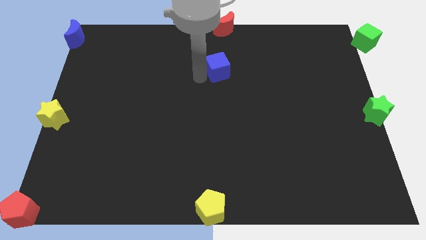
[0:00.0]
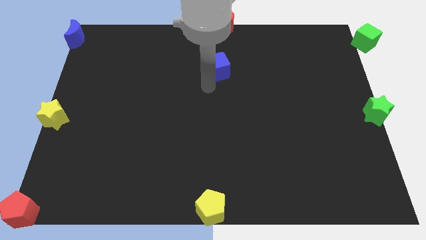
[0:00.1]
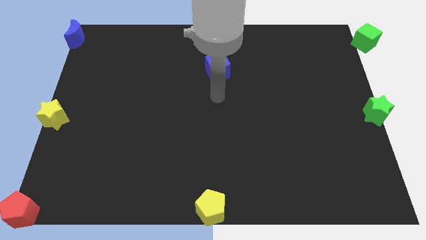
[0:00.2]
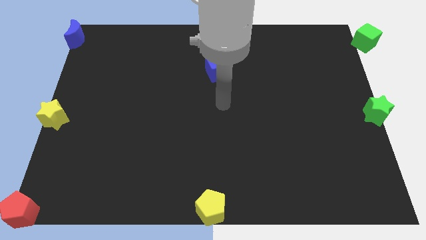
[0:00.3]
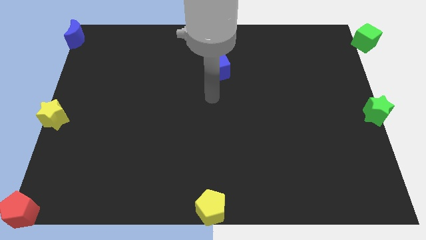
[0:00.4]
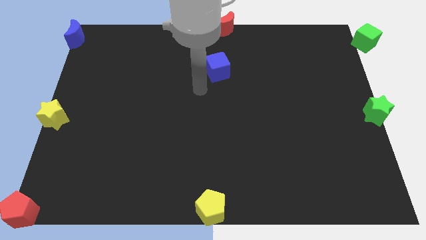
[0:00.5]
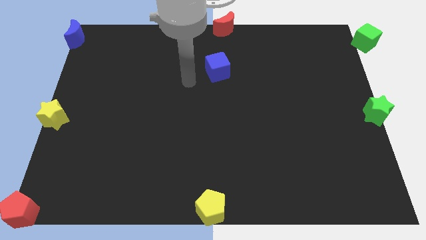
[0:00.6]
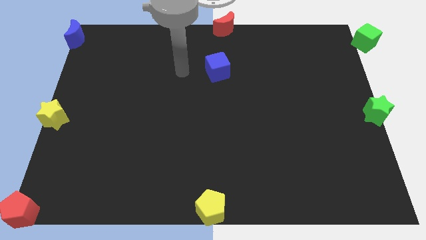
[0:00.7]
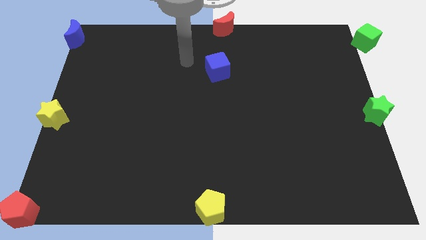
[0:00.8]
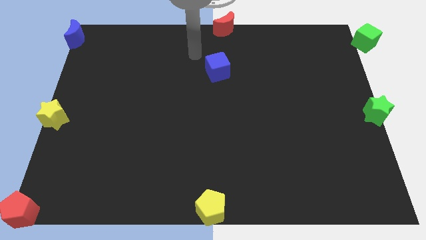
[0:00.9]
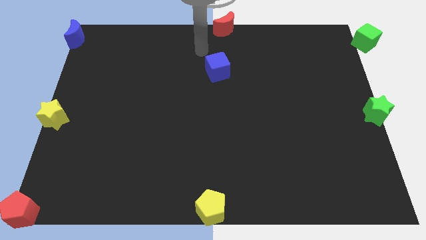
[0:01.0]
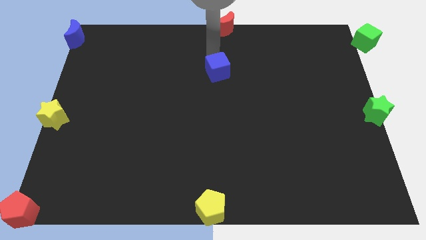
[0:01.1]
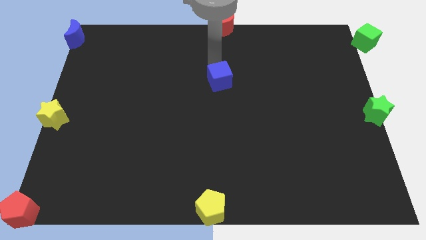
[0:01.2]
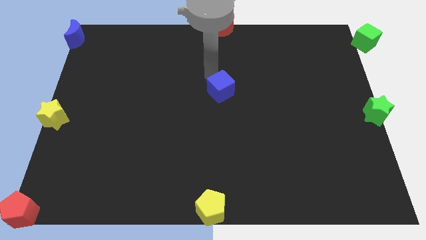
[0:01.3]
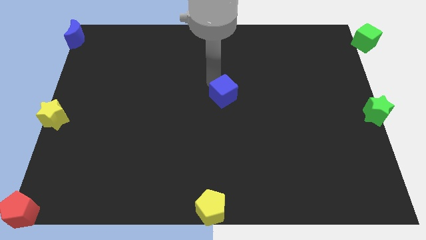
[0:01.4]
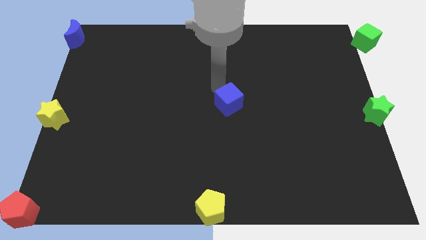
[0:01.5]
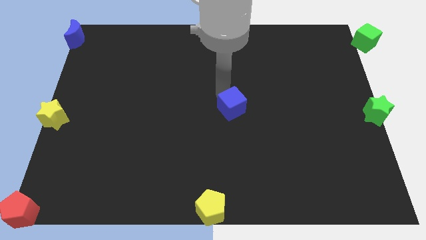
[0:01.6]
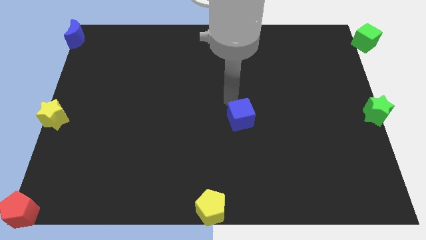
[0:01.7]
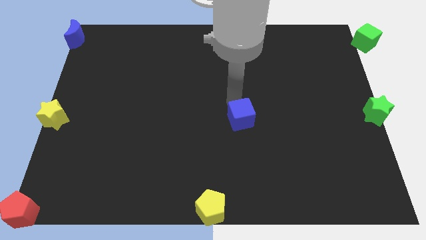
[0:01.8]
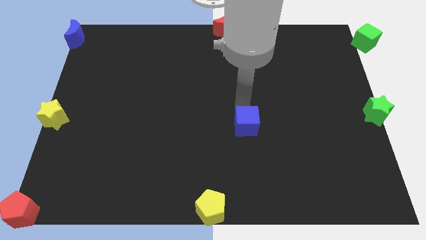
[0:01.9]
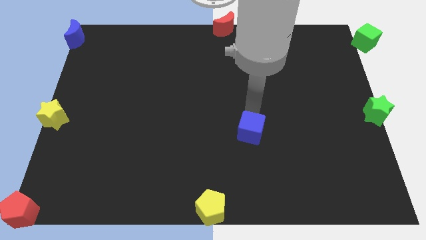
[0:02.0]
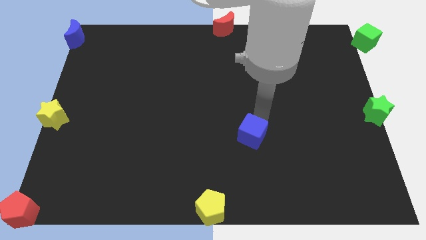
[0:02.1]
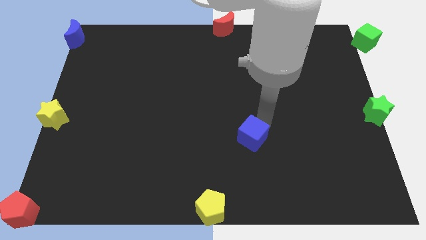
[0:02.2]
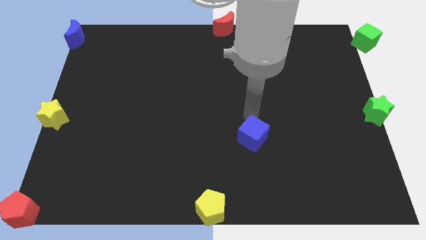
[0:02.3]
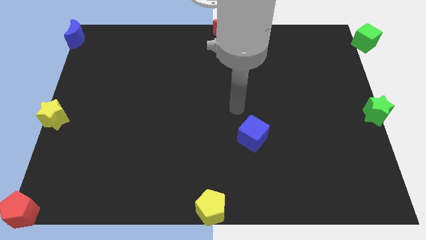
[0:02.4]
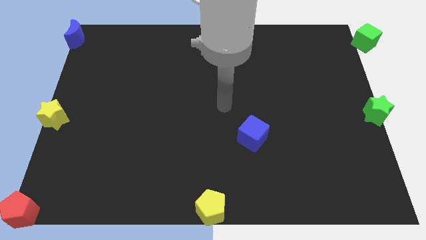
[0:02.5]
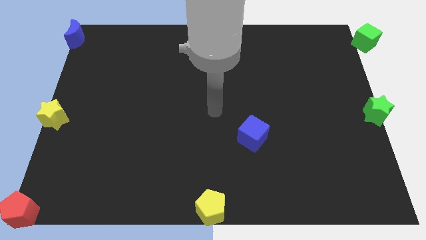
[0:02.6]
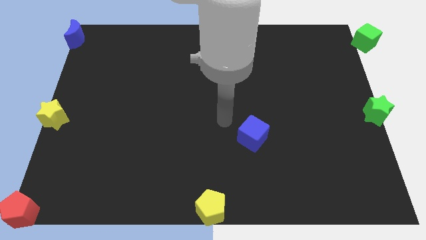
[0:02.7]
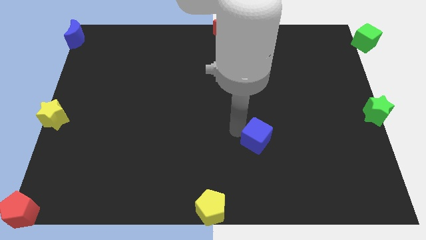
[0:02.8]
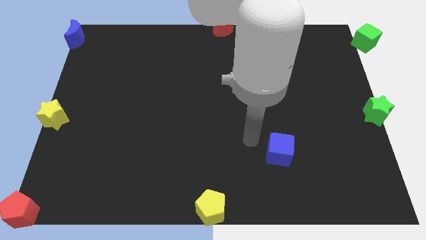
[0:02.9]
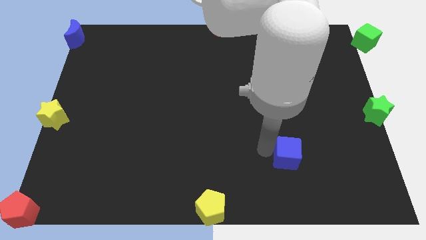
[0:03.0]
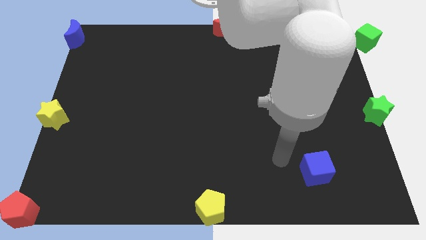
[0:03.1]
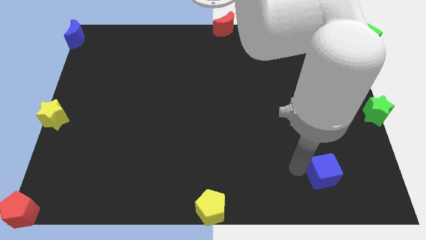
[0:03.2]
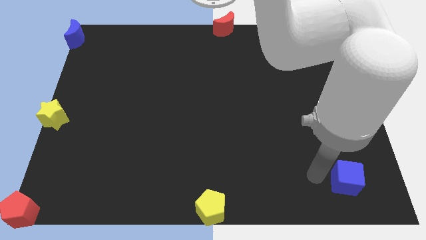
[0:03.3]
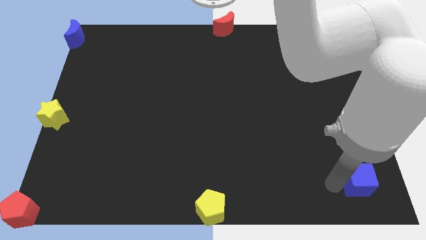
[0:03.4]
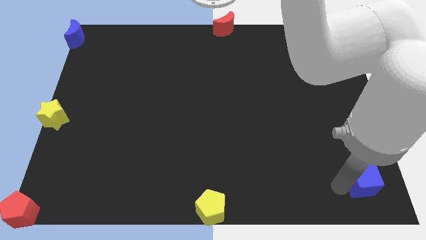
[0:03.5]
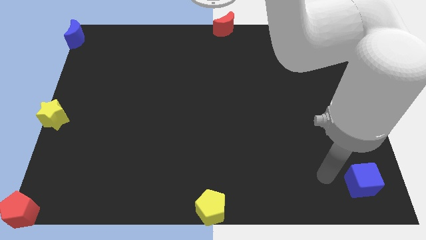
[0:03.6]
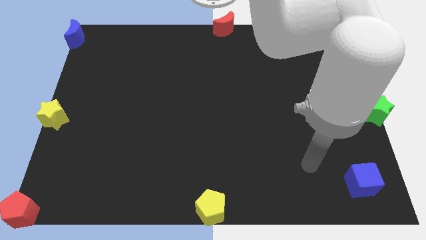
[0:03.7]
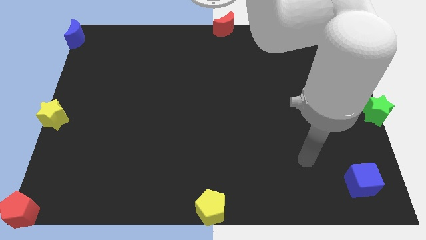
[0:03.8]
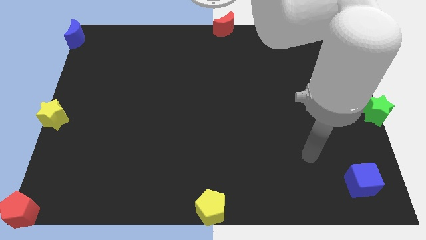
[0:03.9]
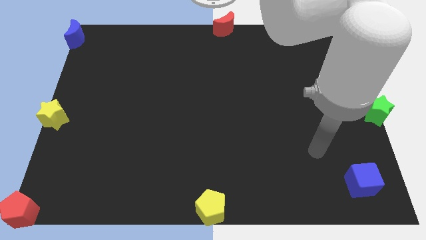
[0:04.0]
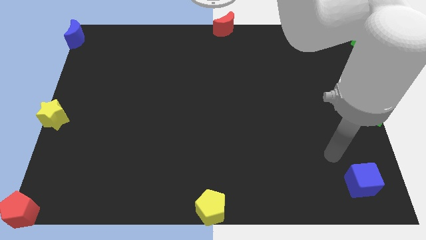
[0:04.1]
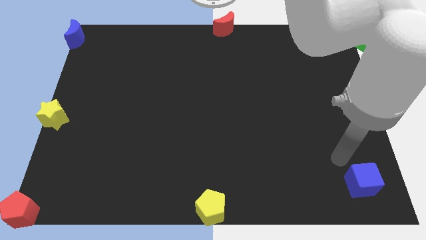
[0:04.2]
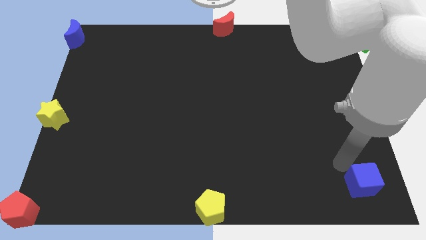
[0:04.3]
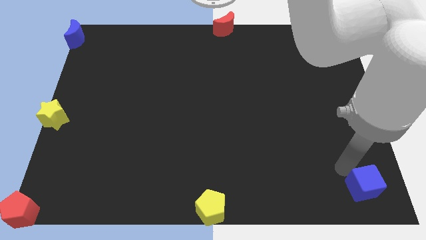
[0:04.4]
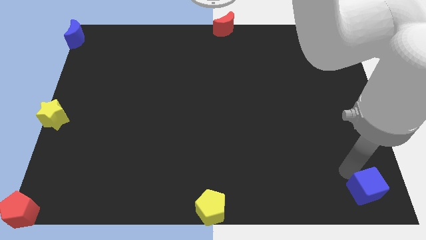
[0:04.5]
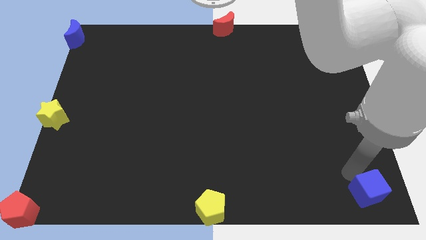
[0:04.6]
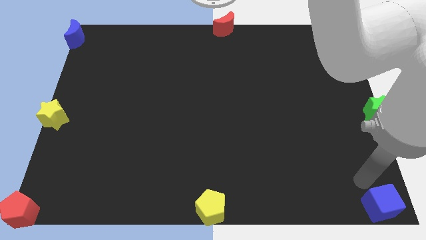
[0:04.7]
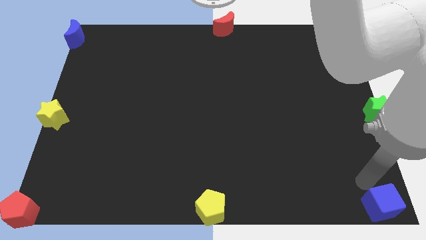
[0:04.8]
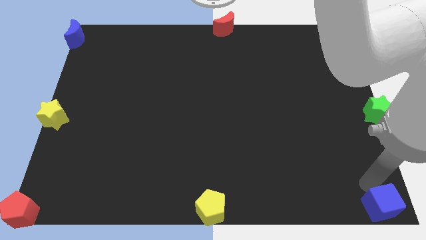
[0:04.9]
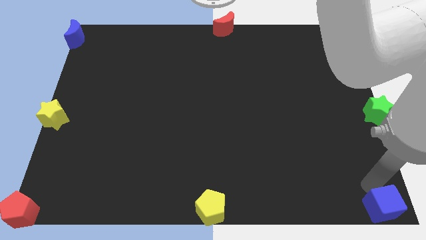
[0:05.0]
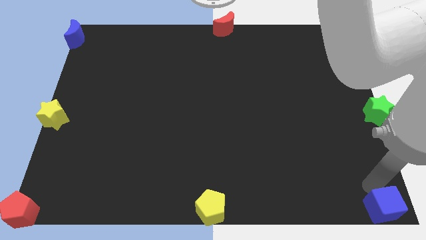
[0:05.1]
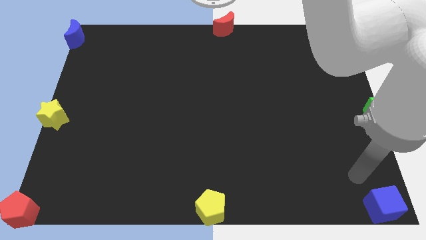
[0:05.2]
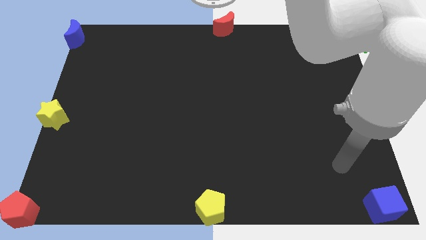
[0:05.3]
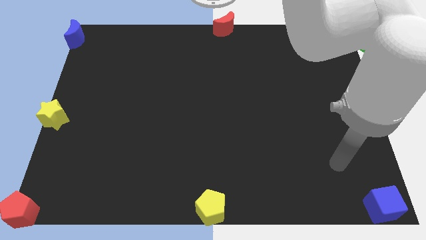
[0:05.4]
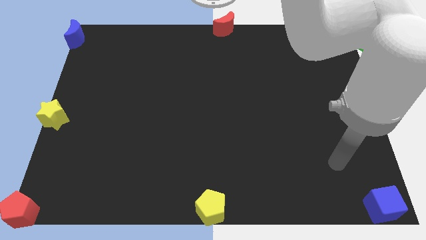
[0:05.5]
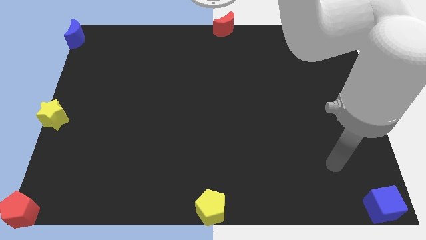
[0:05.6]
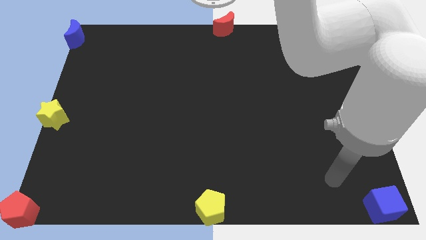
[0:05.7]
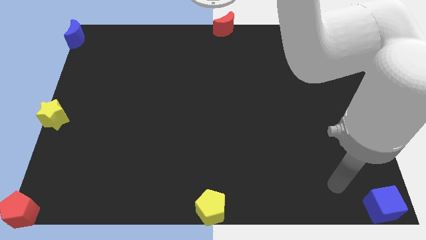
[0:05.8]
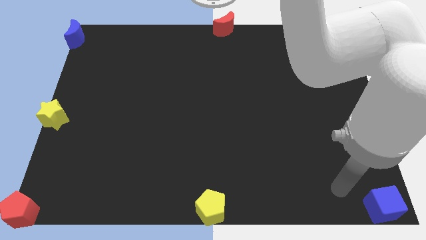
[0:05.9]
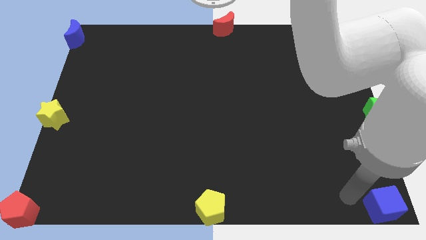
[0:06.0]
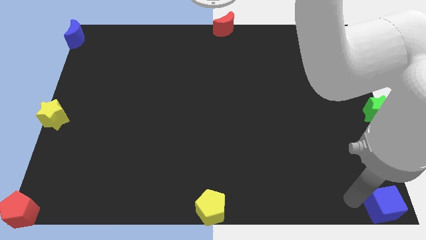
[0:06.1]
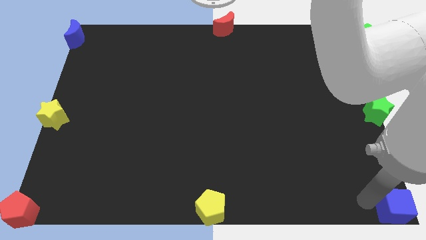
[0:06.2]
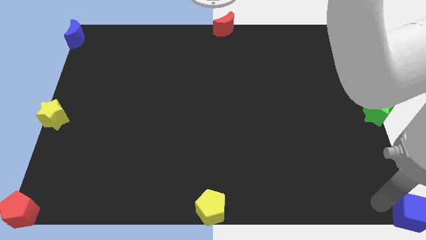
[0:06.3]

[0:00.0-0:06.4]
move the blue cube to the bottom right of the board

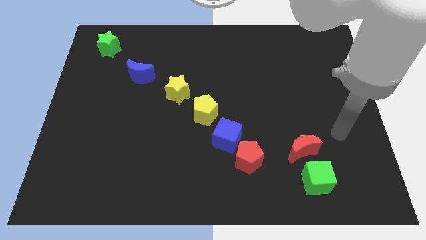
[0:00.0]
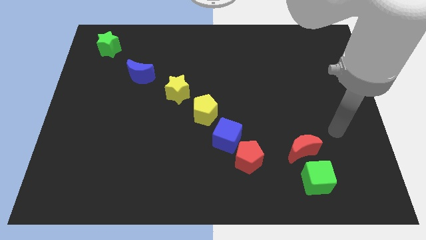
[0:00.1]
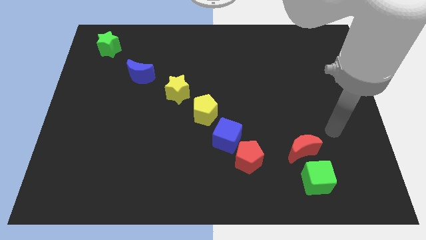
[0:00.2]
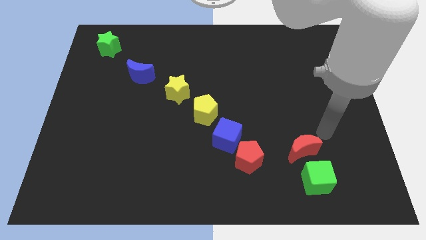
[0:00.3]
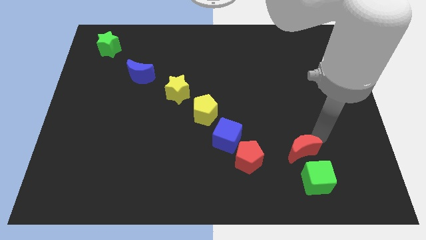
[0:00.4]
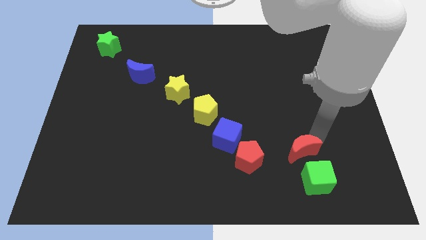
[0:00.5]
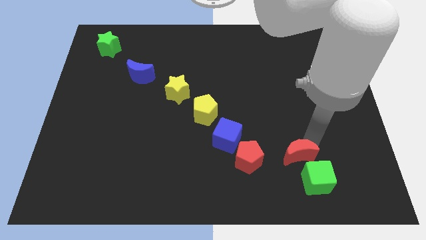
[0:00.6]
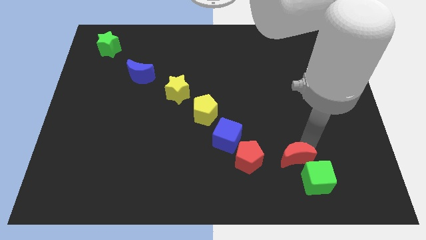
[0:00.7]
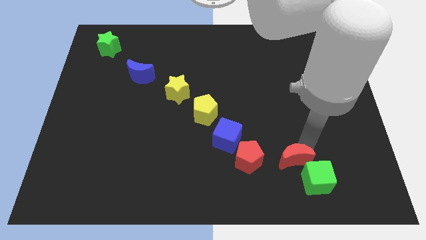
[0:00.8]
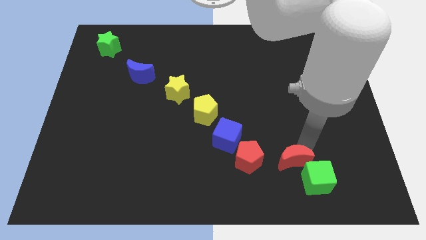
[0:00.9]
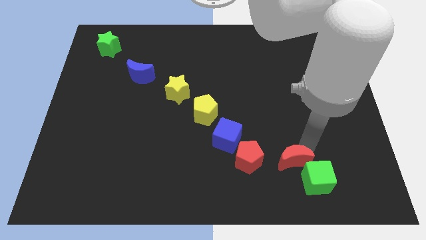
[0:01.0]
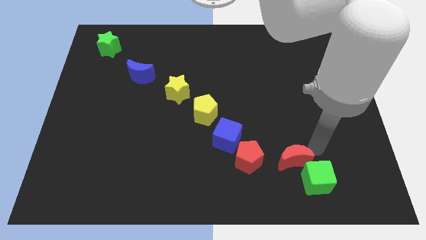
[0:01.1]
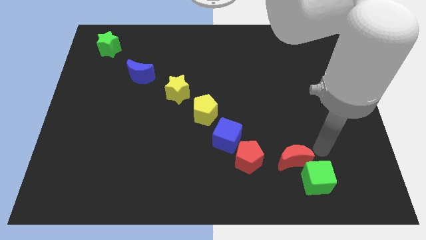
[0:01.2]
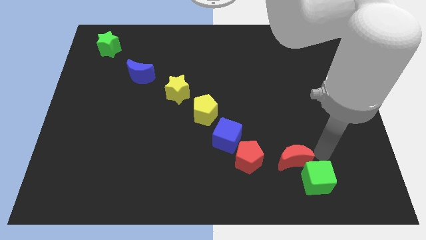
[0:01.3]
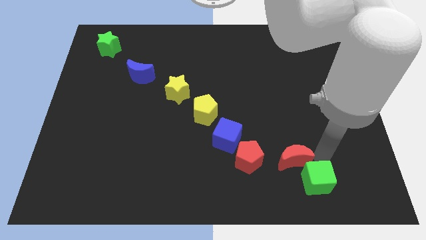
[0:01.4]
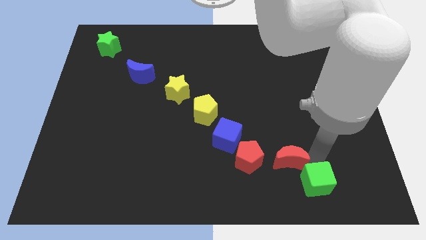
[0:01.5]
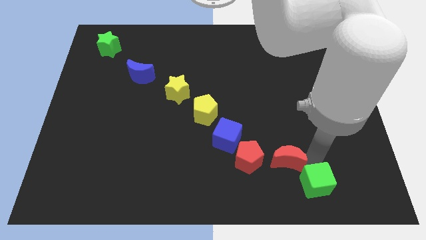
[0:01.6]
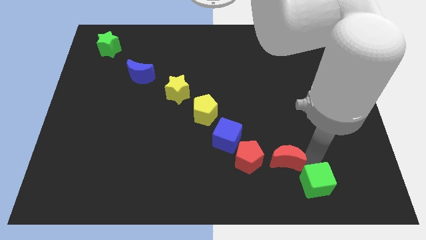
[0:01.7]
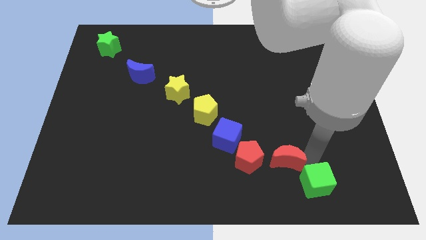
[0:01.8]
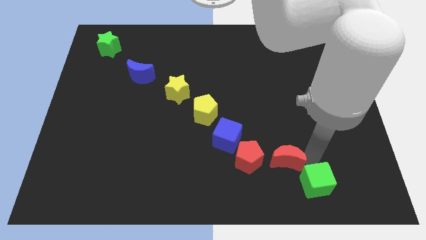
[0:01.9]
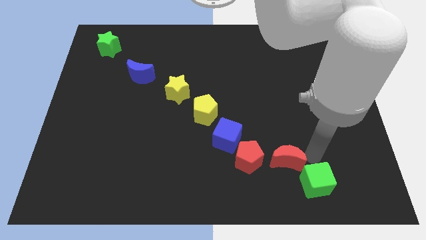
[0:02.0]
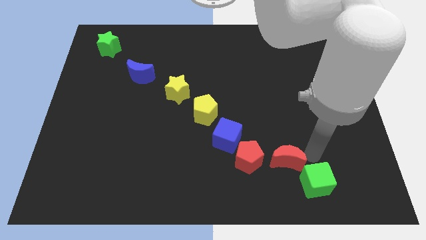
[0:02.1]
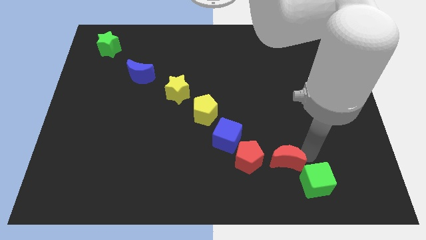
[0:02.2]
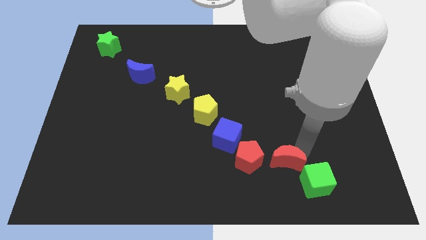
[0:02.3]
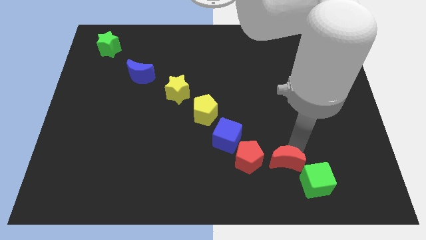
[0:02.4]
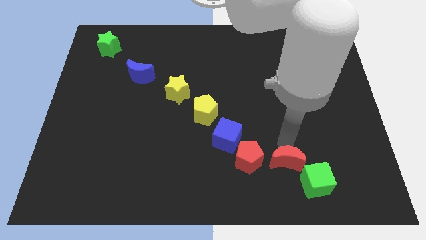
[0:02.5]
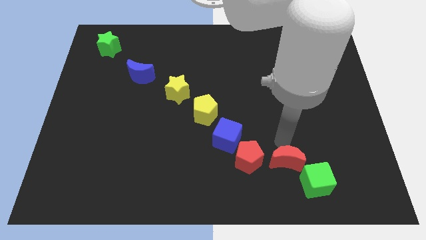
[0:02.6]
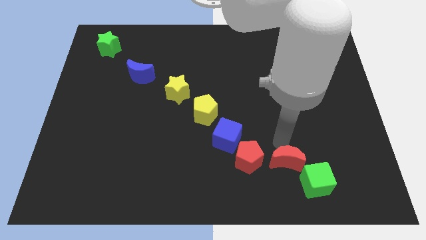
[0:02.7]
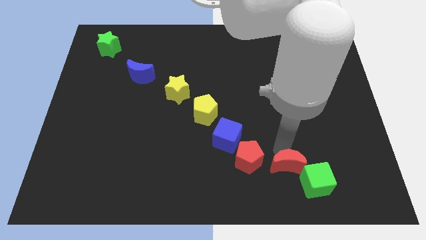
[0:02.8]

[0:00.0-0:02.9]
slide the red moon diagonally bottom right to red pentagon
